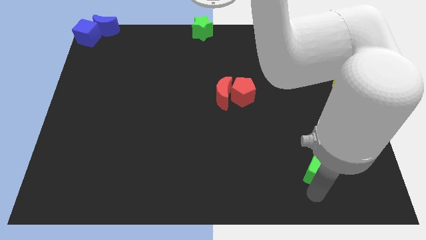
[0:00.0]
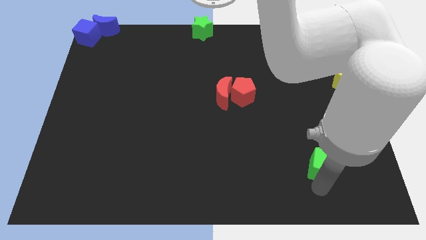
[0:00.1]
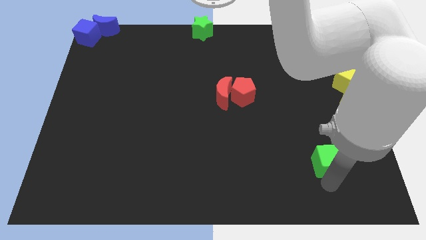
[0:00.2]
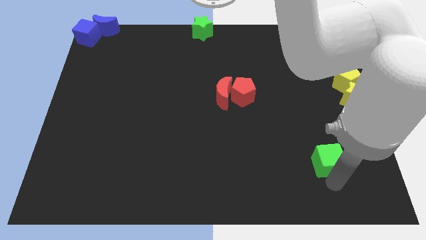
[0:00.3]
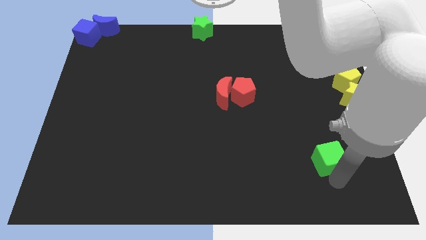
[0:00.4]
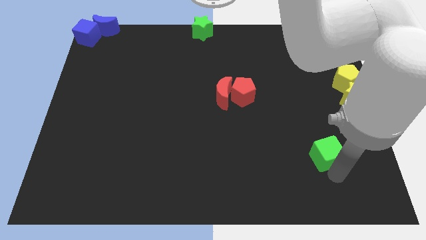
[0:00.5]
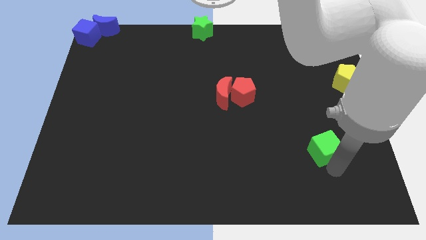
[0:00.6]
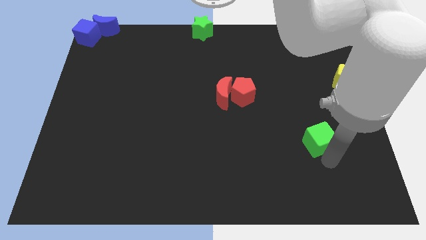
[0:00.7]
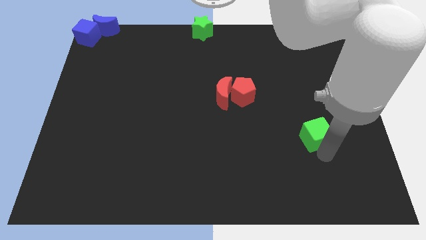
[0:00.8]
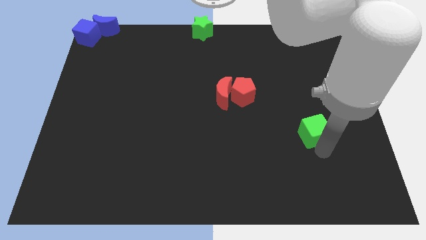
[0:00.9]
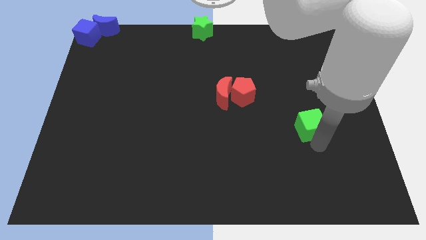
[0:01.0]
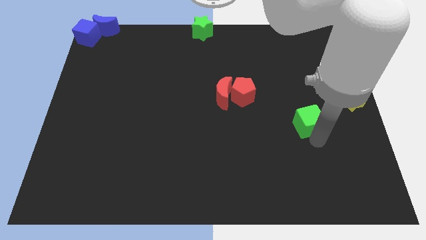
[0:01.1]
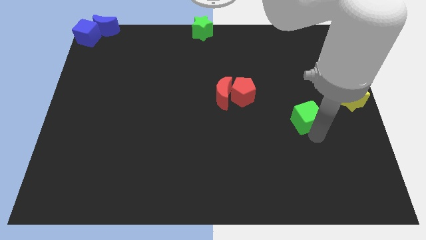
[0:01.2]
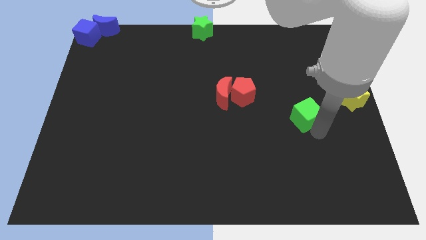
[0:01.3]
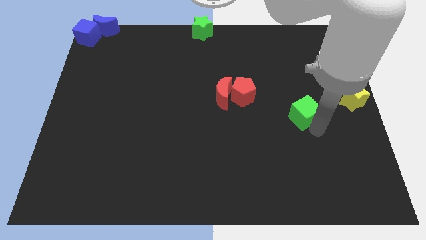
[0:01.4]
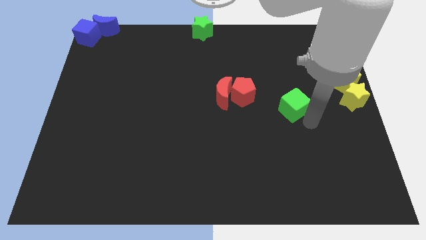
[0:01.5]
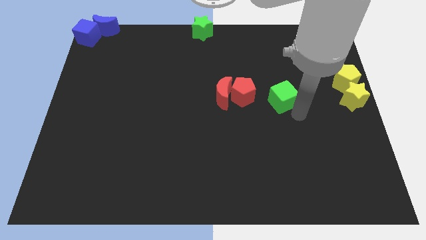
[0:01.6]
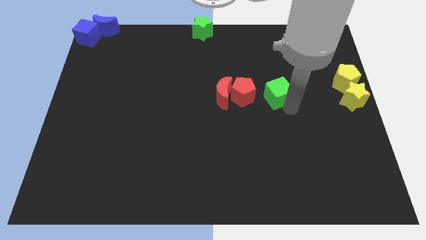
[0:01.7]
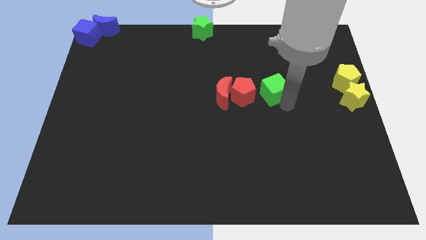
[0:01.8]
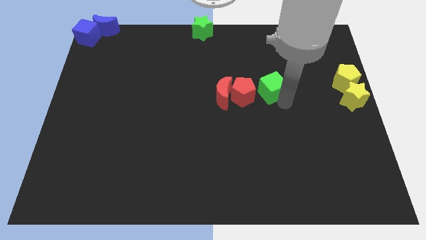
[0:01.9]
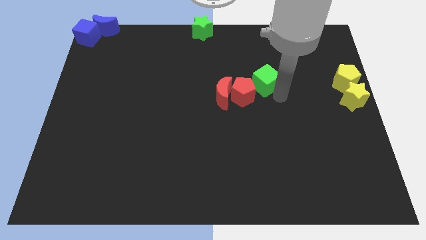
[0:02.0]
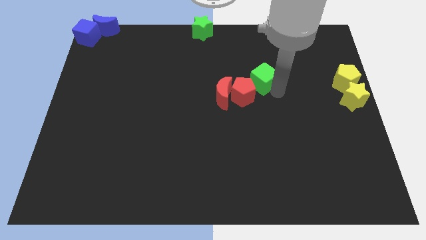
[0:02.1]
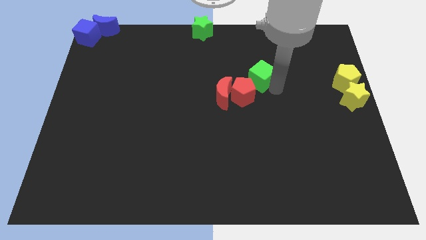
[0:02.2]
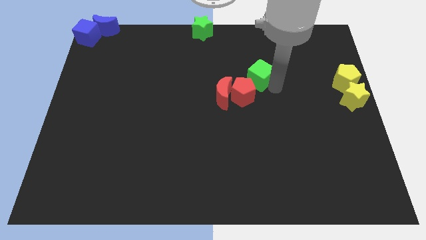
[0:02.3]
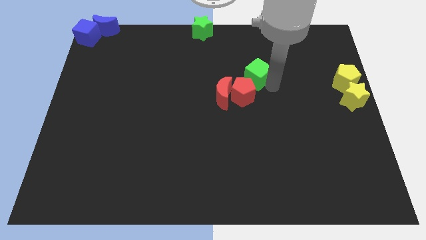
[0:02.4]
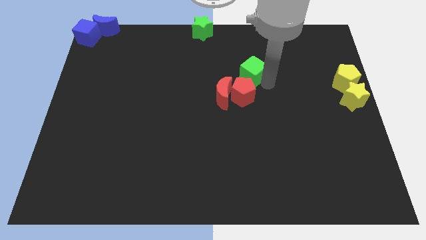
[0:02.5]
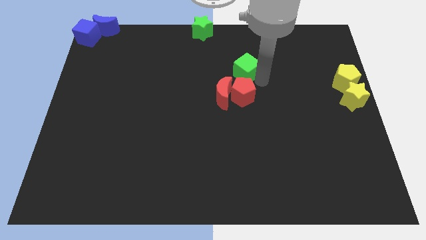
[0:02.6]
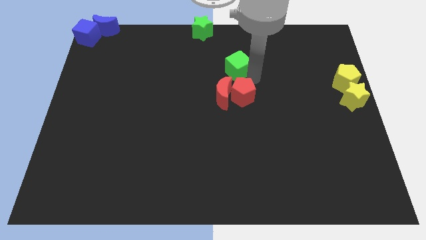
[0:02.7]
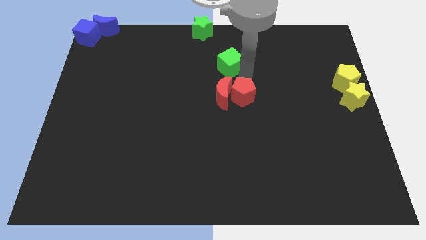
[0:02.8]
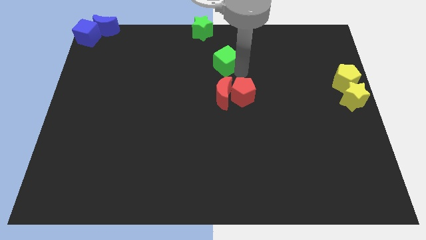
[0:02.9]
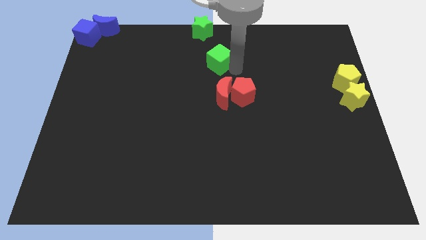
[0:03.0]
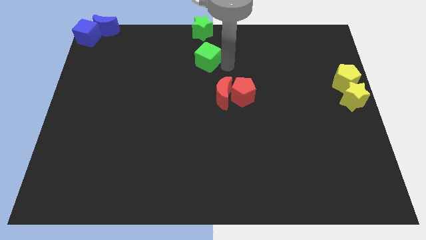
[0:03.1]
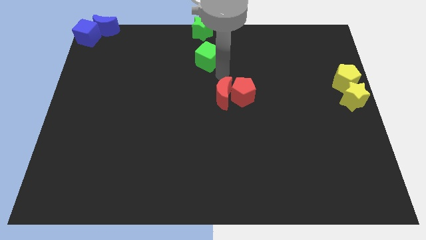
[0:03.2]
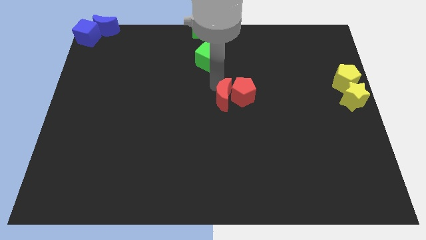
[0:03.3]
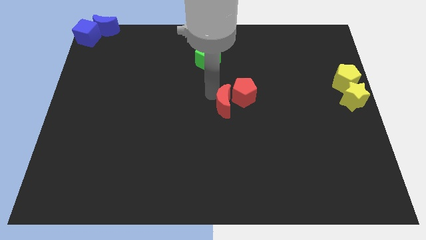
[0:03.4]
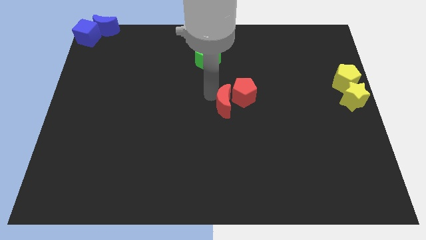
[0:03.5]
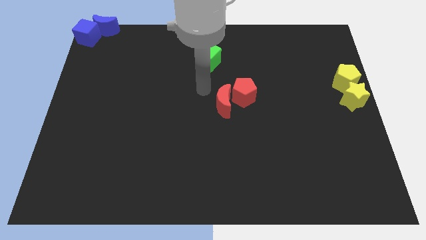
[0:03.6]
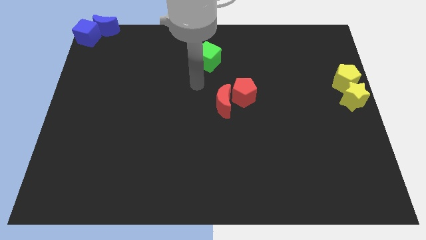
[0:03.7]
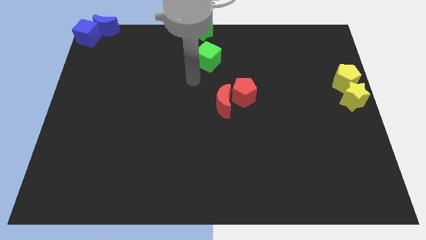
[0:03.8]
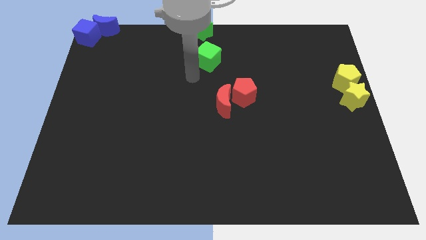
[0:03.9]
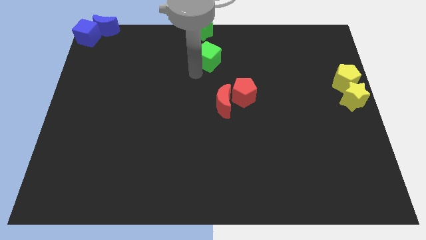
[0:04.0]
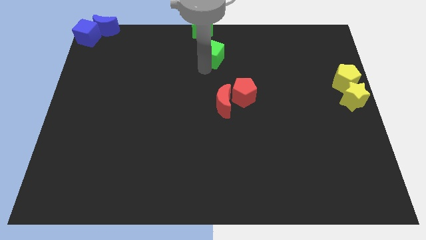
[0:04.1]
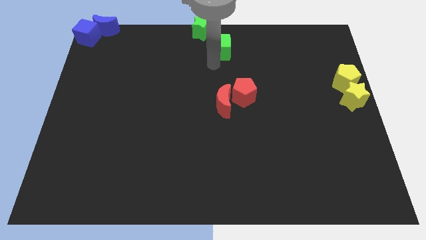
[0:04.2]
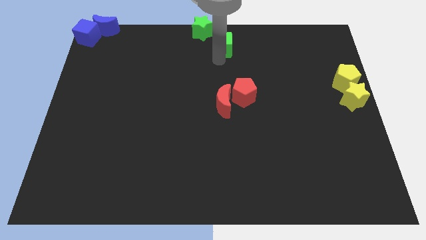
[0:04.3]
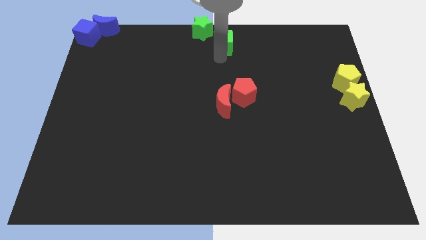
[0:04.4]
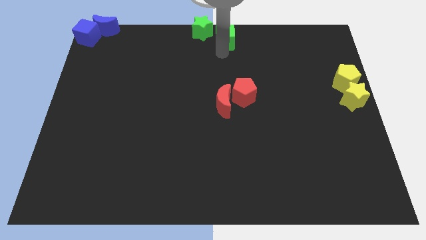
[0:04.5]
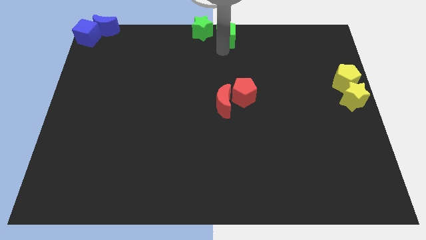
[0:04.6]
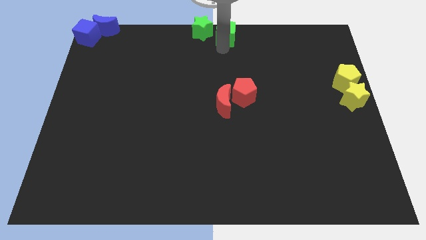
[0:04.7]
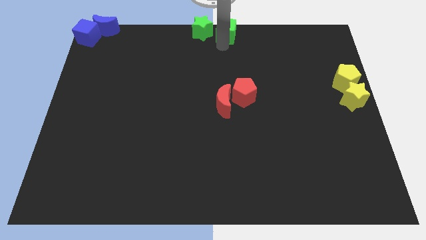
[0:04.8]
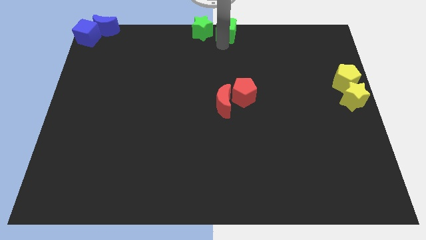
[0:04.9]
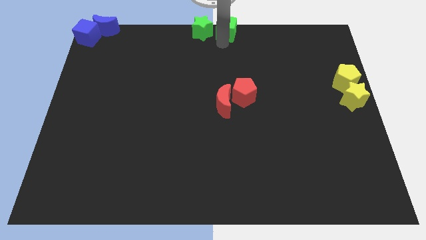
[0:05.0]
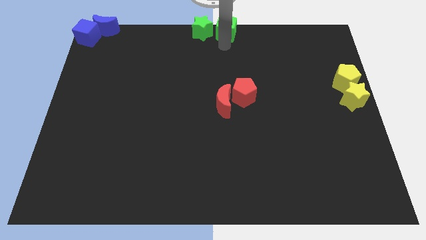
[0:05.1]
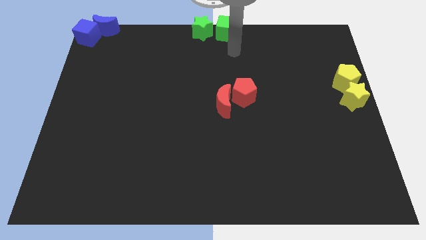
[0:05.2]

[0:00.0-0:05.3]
place the green cube to the right of the green star

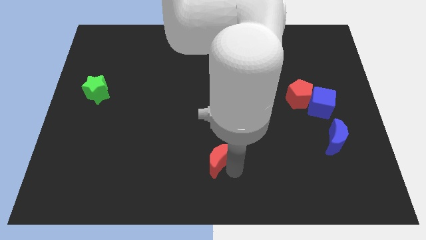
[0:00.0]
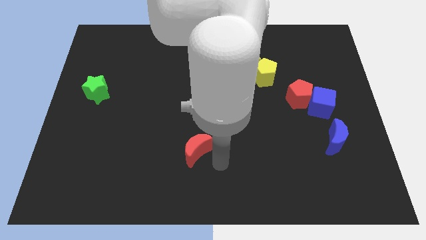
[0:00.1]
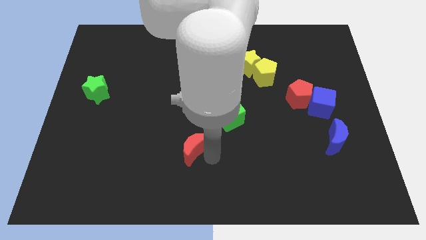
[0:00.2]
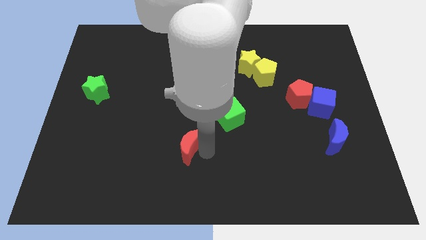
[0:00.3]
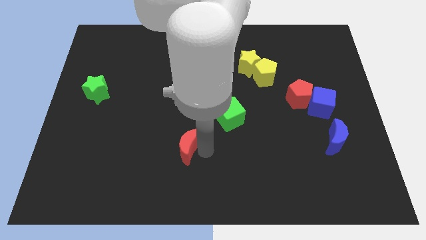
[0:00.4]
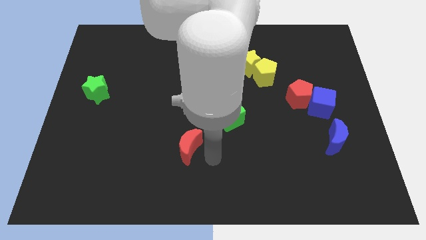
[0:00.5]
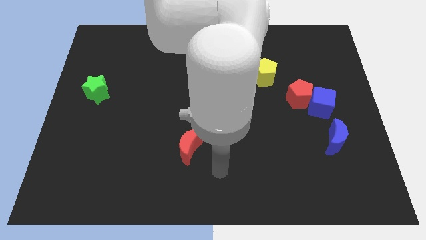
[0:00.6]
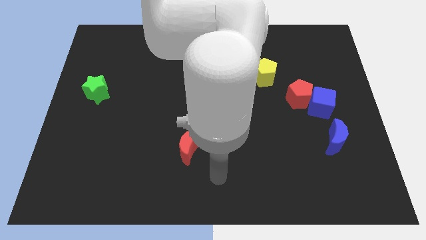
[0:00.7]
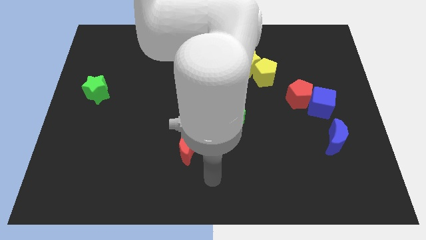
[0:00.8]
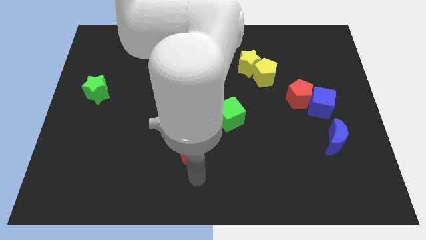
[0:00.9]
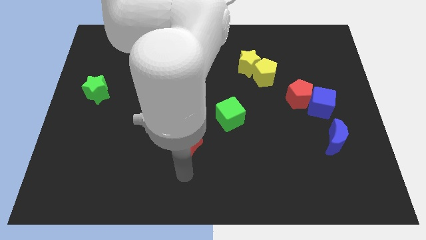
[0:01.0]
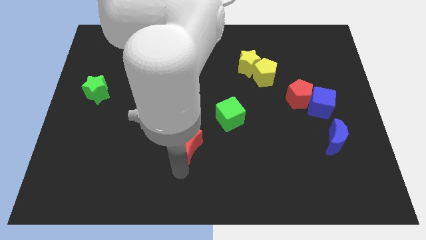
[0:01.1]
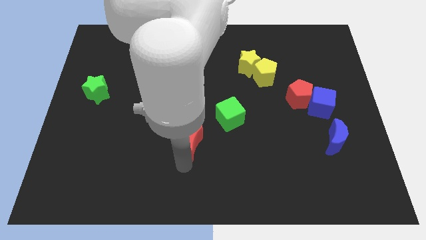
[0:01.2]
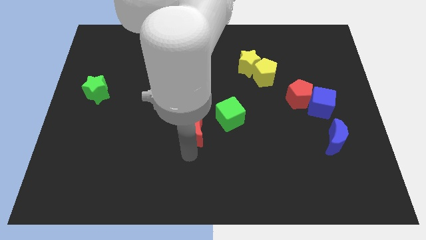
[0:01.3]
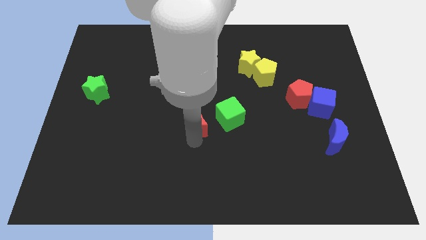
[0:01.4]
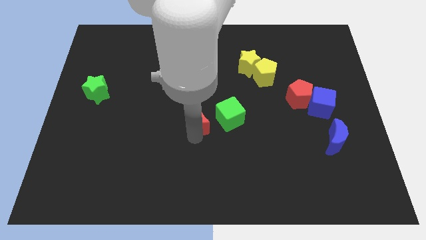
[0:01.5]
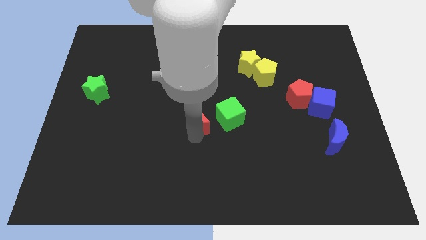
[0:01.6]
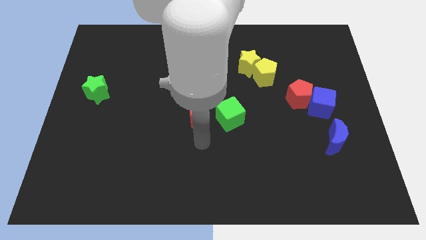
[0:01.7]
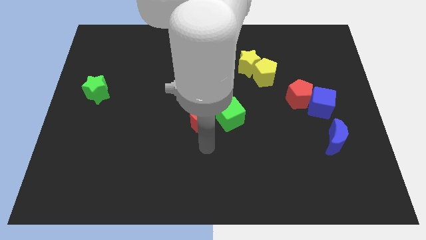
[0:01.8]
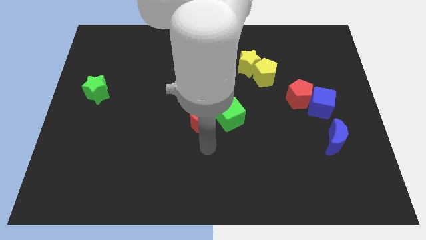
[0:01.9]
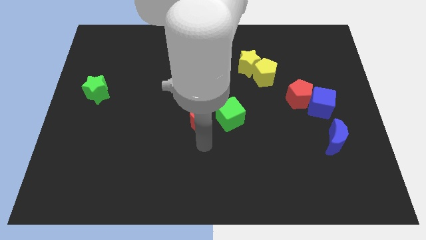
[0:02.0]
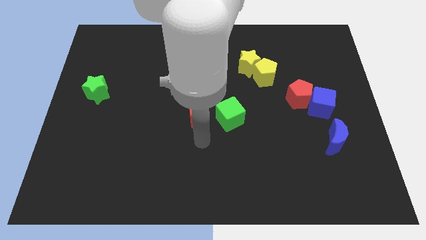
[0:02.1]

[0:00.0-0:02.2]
place the red crescent to left side of the green cube

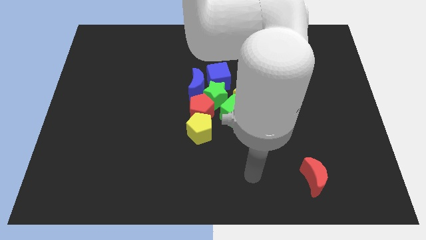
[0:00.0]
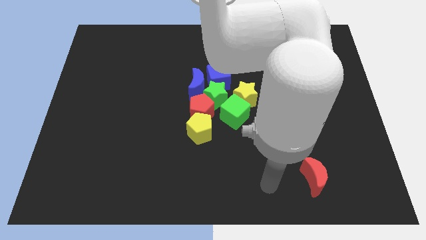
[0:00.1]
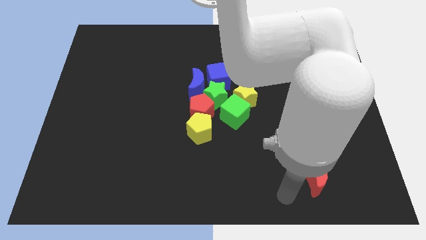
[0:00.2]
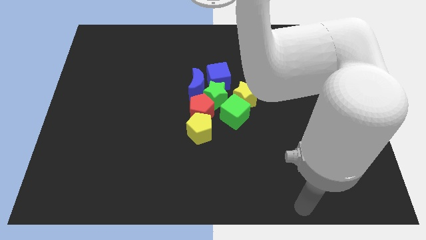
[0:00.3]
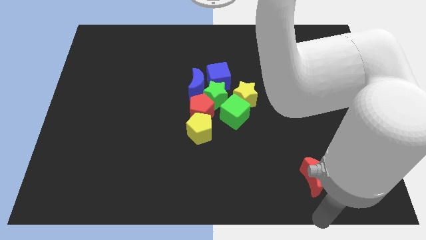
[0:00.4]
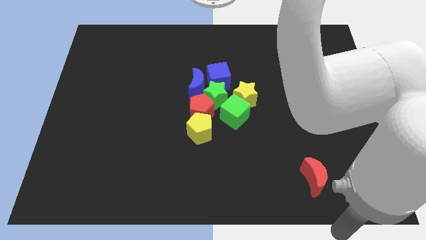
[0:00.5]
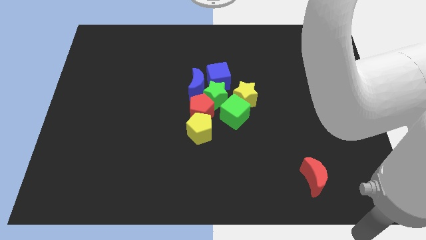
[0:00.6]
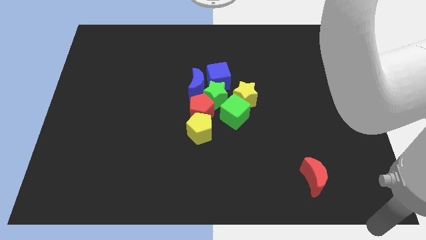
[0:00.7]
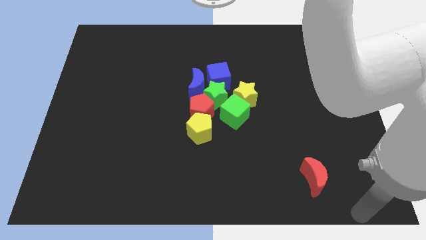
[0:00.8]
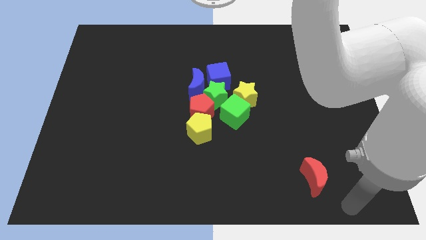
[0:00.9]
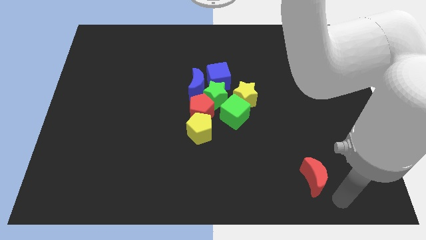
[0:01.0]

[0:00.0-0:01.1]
move your arm to the bottom right of the board

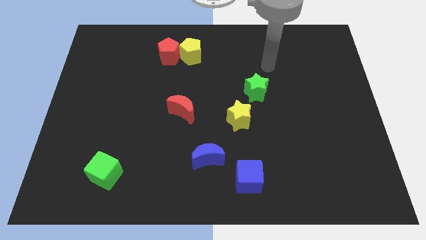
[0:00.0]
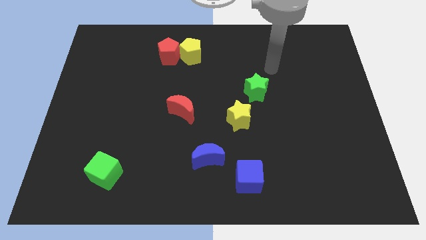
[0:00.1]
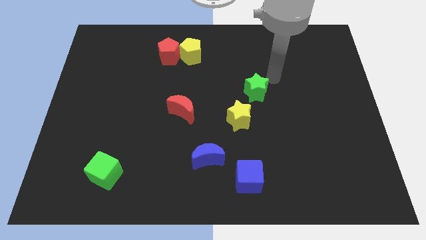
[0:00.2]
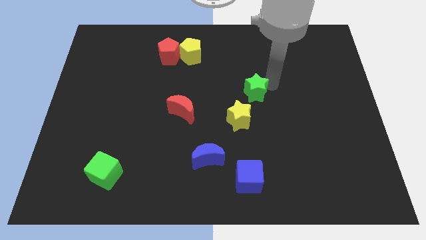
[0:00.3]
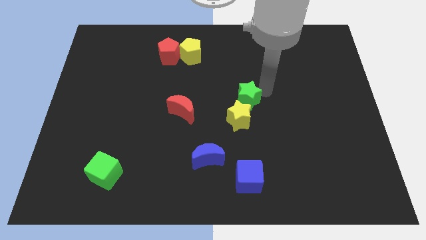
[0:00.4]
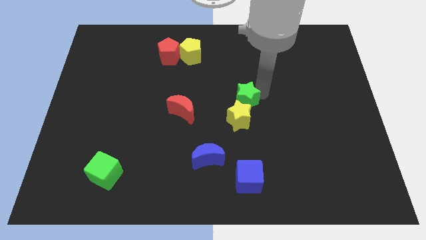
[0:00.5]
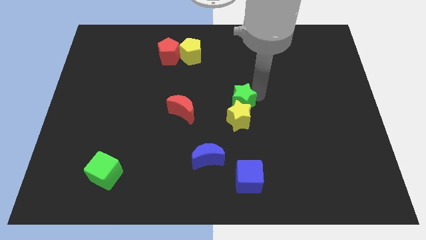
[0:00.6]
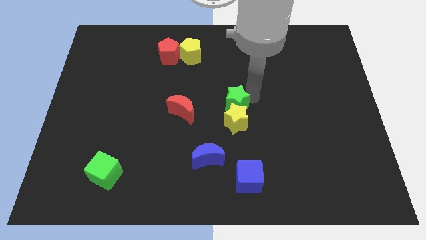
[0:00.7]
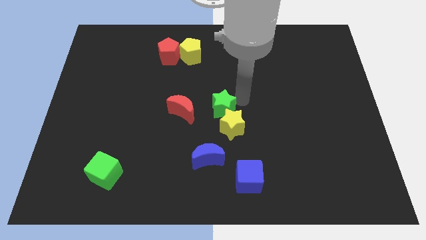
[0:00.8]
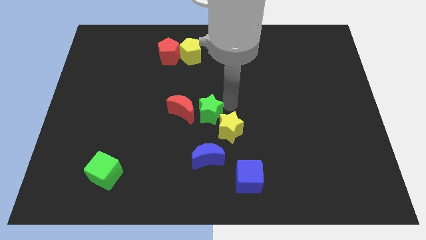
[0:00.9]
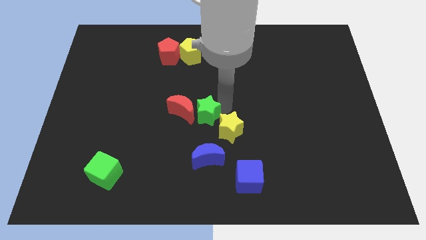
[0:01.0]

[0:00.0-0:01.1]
push the green star into the yellow star
